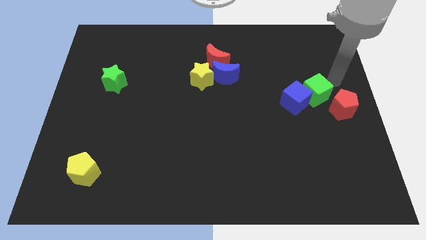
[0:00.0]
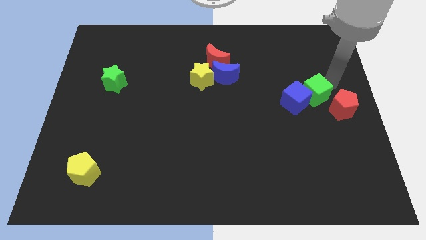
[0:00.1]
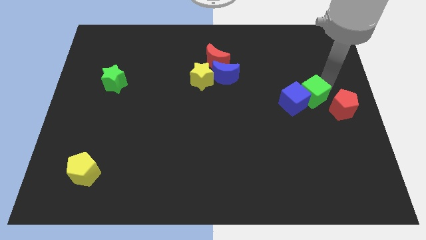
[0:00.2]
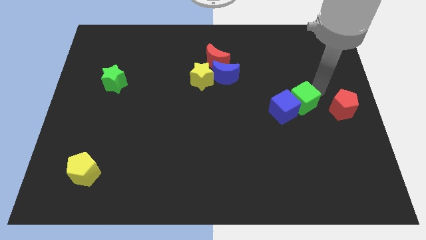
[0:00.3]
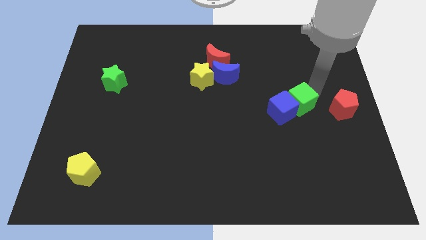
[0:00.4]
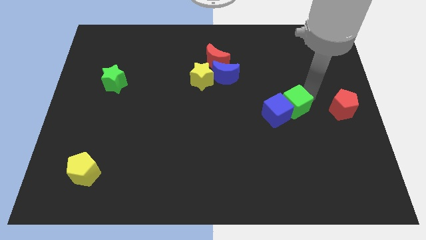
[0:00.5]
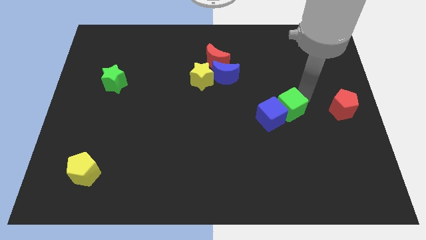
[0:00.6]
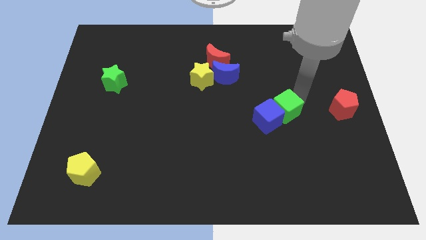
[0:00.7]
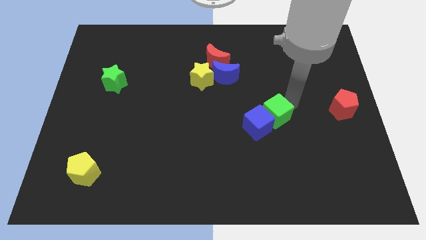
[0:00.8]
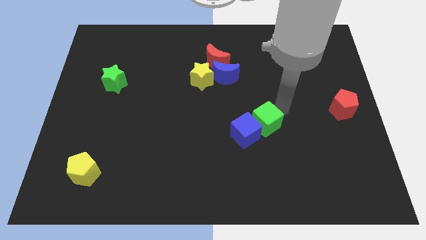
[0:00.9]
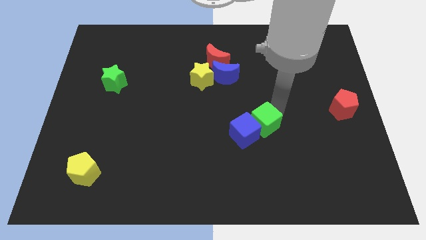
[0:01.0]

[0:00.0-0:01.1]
move the cubes to the bottom left of the board

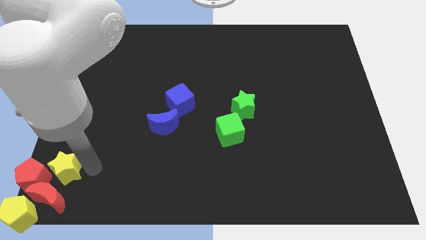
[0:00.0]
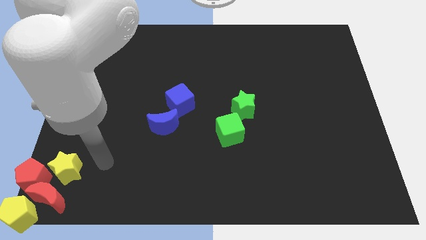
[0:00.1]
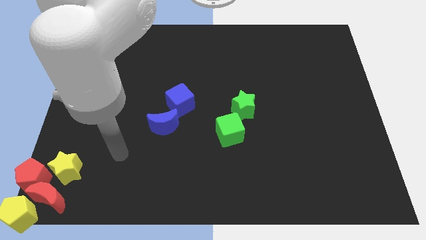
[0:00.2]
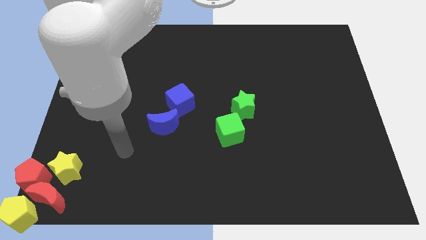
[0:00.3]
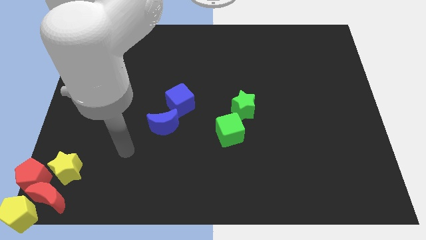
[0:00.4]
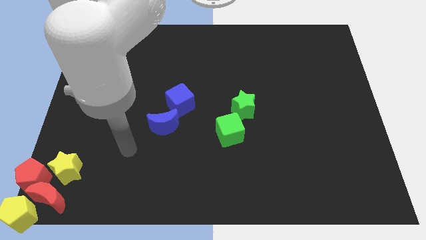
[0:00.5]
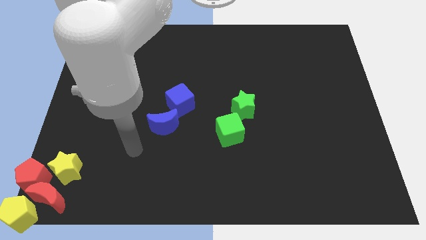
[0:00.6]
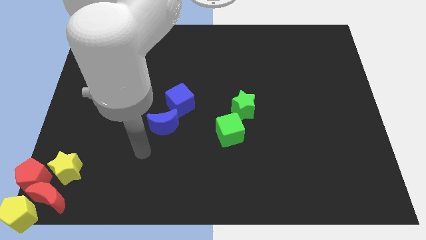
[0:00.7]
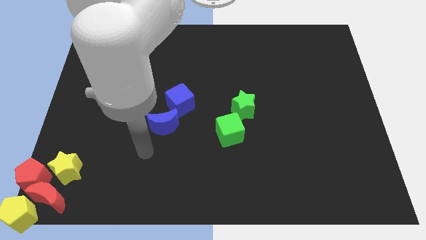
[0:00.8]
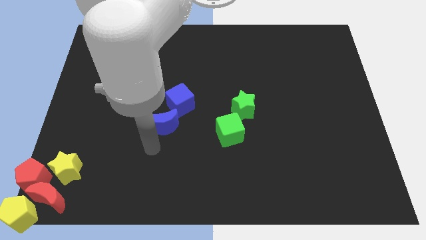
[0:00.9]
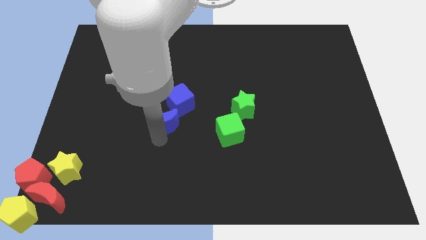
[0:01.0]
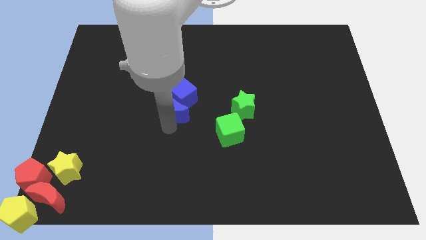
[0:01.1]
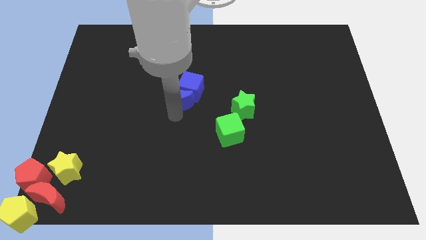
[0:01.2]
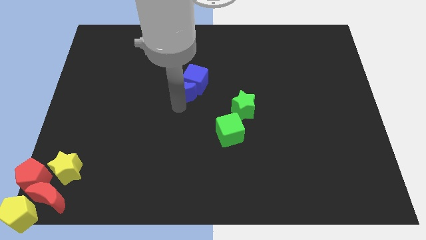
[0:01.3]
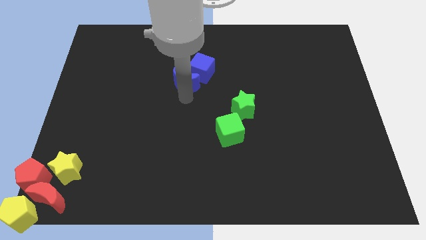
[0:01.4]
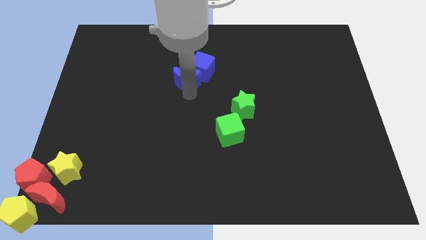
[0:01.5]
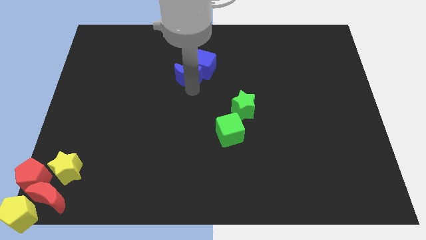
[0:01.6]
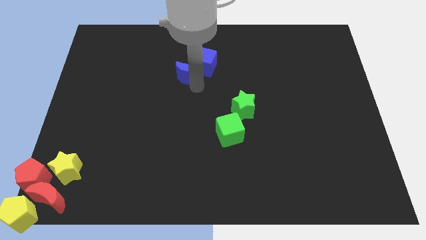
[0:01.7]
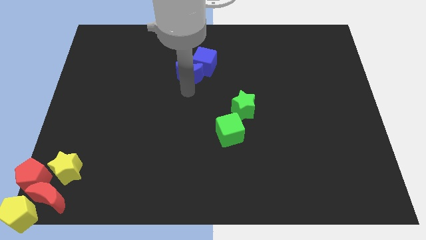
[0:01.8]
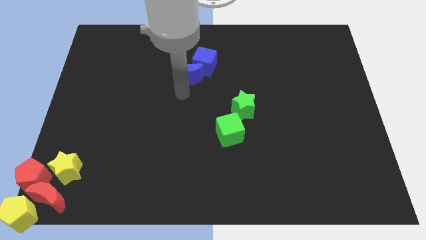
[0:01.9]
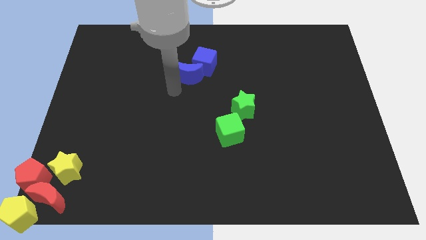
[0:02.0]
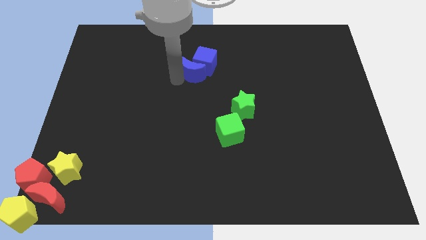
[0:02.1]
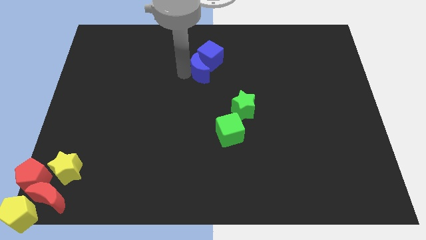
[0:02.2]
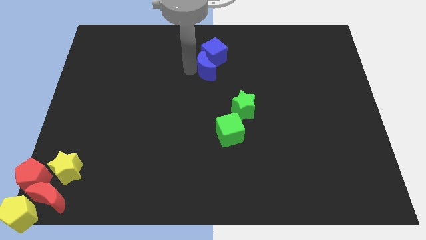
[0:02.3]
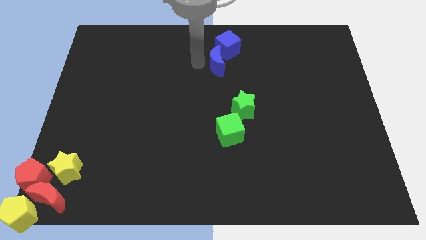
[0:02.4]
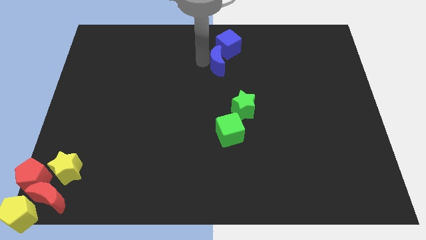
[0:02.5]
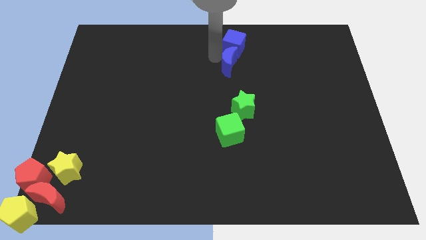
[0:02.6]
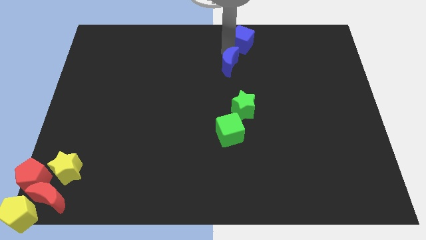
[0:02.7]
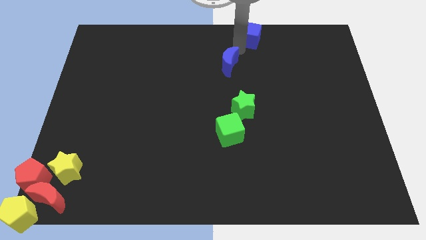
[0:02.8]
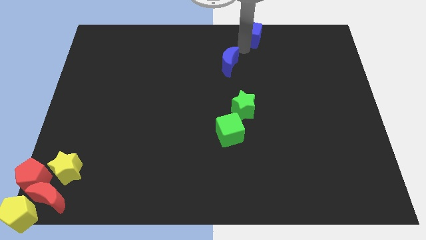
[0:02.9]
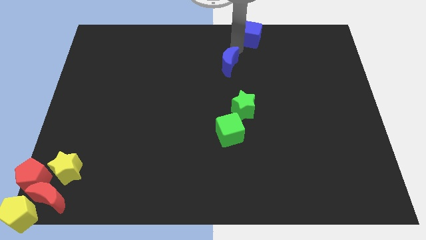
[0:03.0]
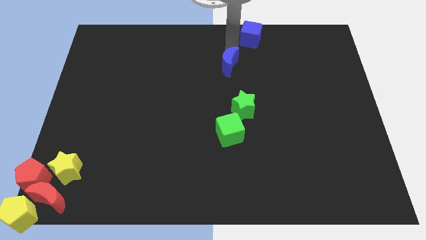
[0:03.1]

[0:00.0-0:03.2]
push the blue blocks to the top center with the blue moon

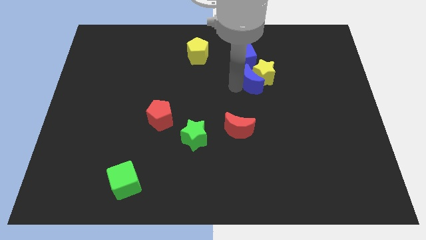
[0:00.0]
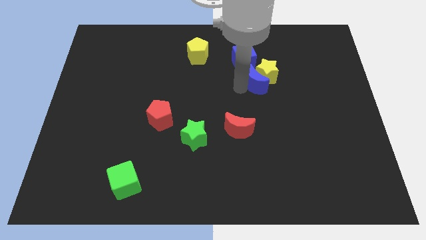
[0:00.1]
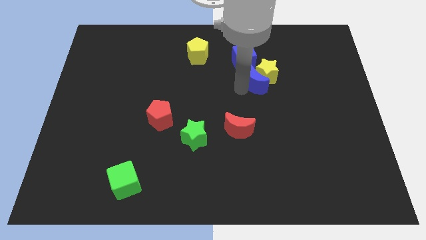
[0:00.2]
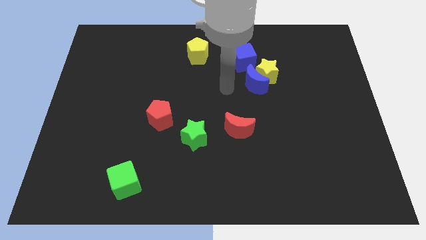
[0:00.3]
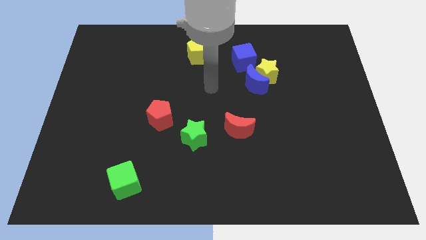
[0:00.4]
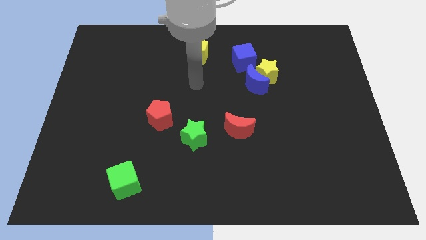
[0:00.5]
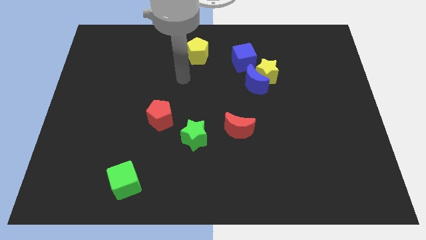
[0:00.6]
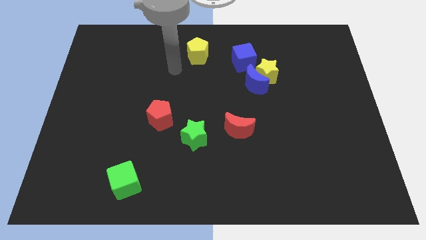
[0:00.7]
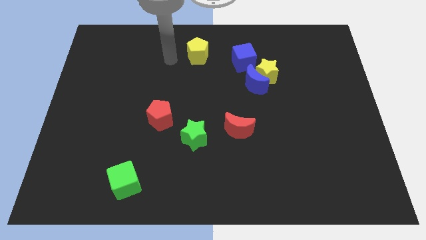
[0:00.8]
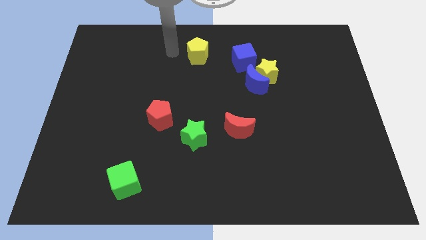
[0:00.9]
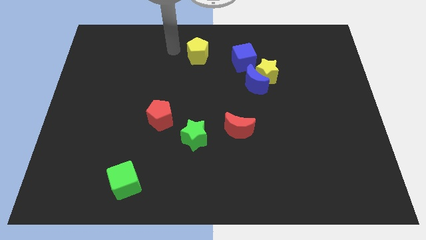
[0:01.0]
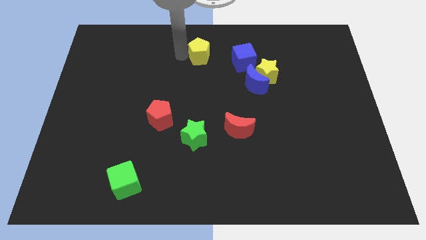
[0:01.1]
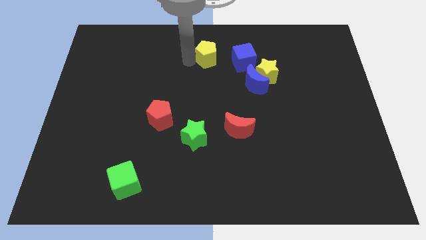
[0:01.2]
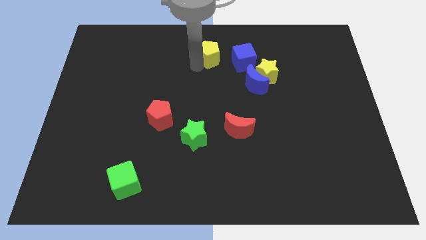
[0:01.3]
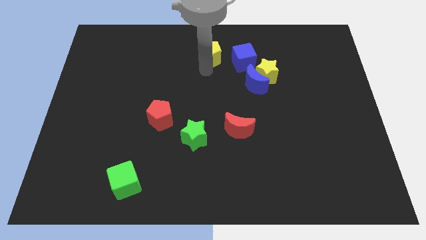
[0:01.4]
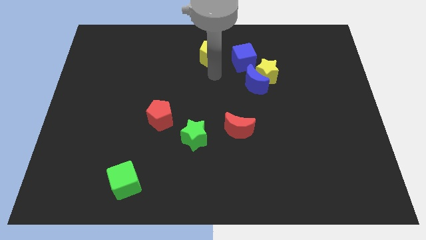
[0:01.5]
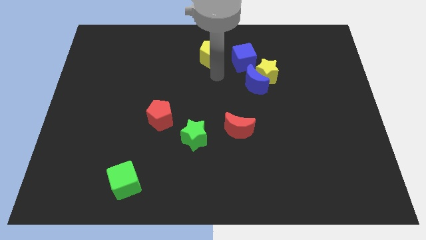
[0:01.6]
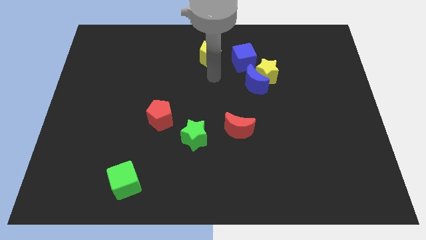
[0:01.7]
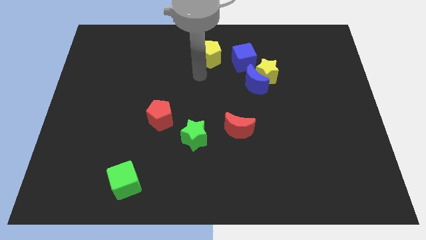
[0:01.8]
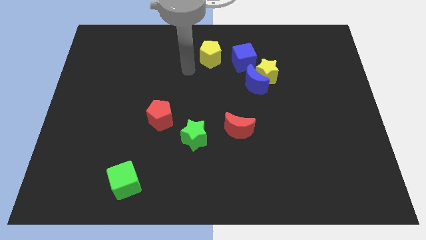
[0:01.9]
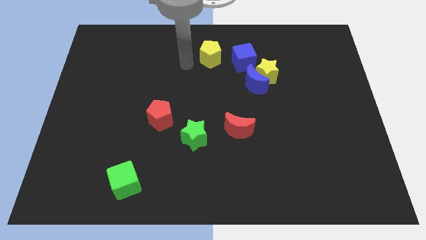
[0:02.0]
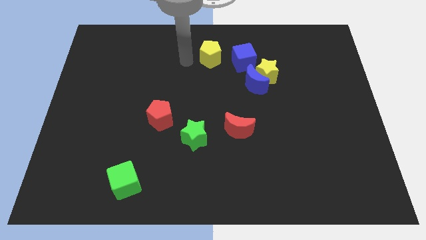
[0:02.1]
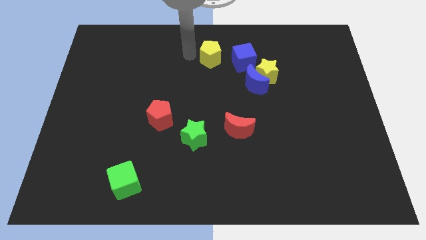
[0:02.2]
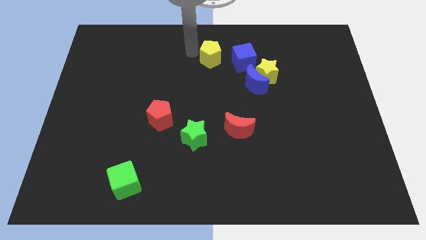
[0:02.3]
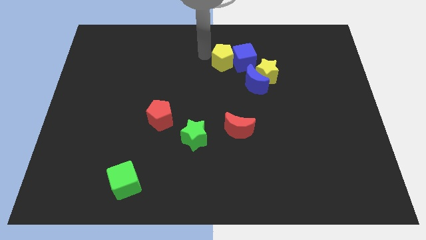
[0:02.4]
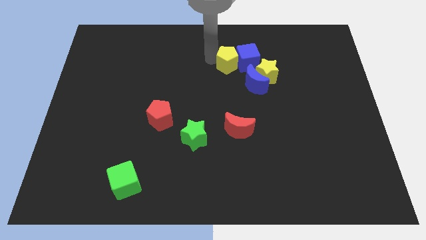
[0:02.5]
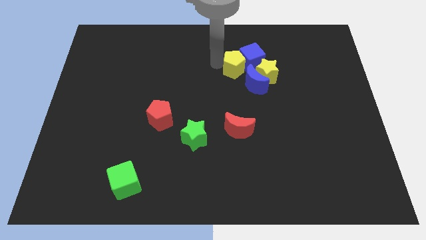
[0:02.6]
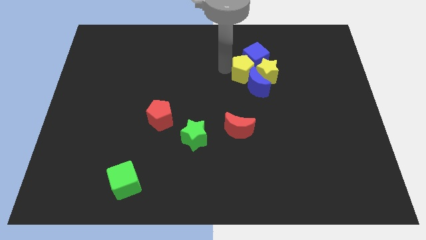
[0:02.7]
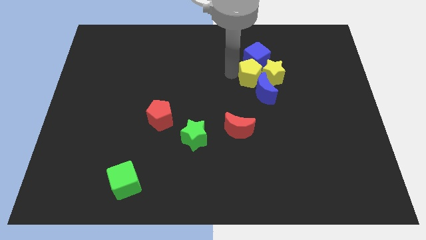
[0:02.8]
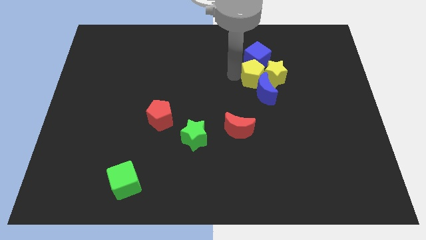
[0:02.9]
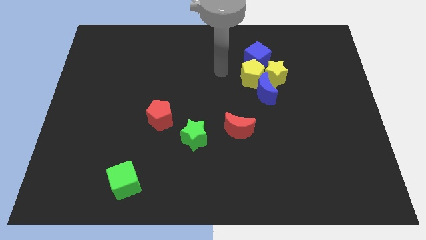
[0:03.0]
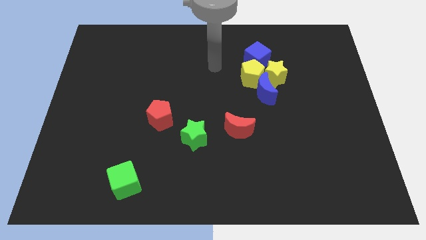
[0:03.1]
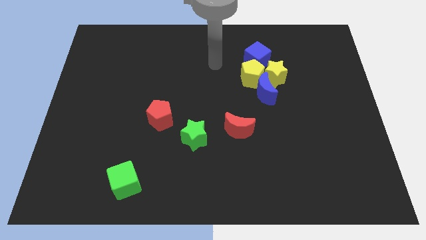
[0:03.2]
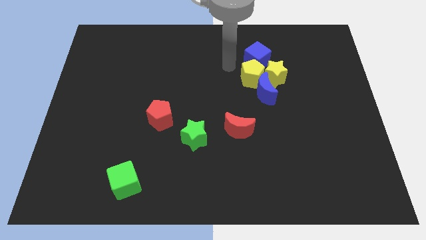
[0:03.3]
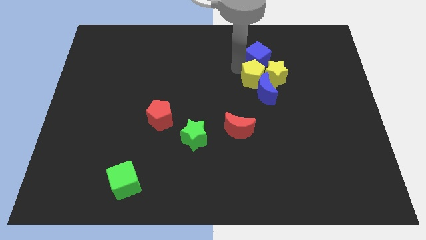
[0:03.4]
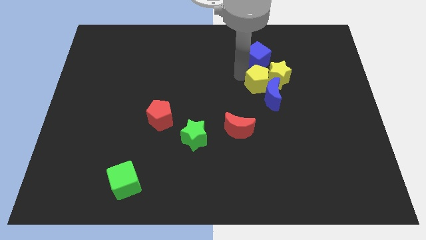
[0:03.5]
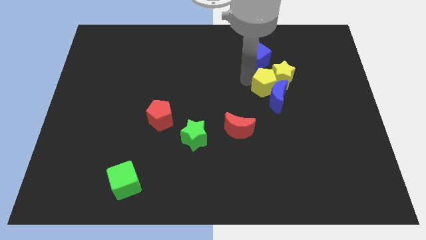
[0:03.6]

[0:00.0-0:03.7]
place yellow pentagon towards yellow star

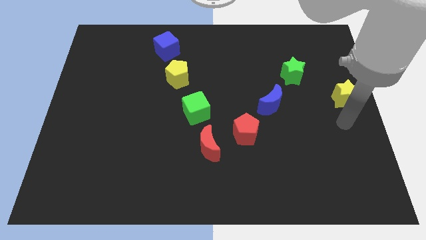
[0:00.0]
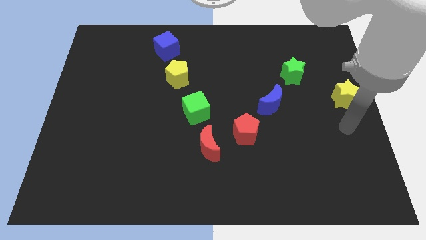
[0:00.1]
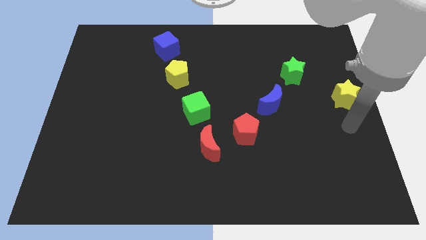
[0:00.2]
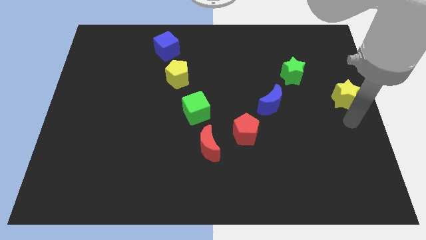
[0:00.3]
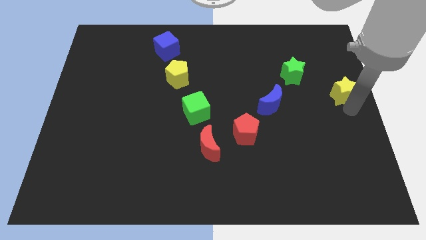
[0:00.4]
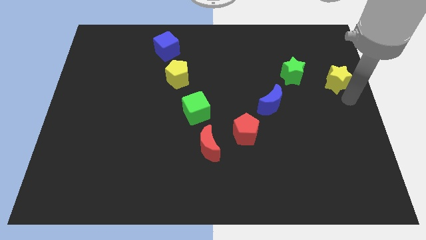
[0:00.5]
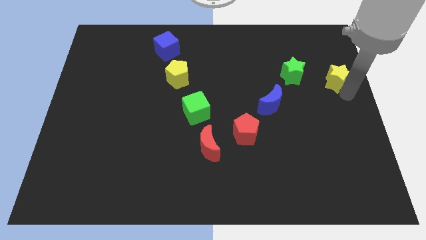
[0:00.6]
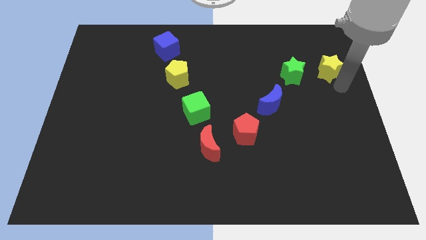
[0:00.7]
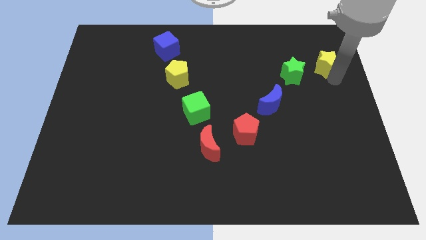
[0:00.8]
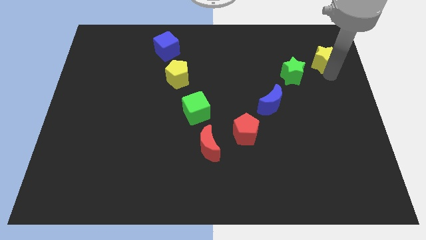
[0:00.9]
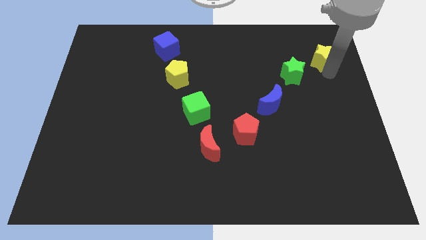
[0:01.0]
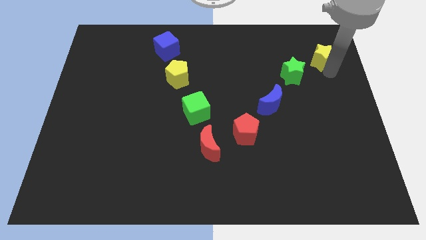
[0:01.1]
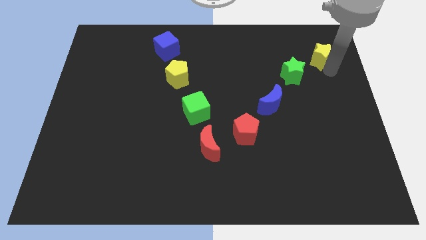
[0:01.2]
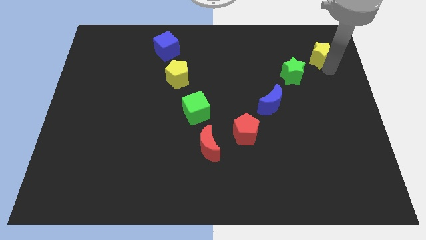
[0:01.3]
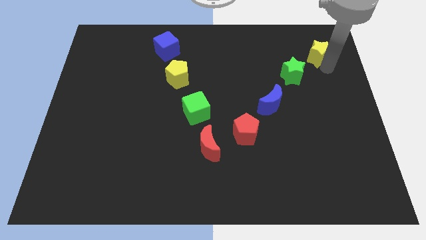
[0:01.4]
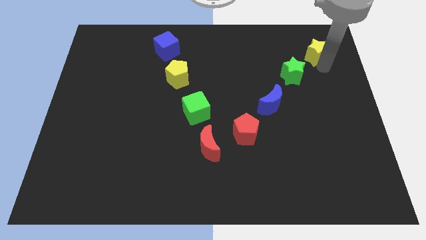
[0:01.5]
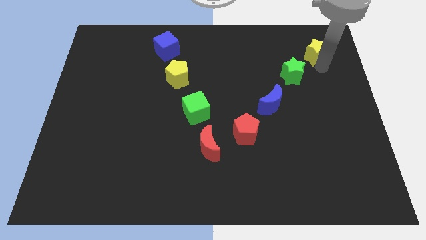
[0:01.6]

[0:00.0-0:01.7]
place yellow star in diagonal position with the green star
